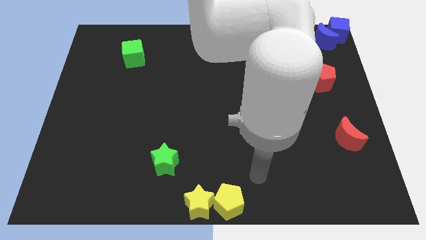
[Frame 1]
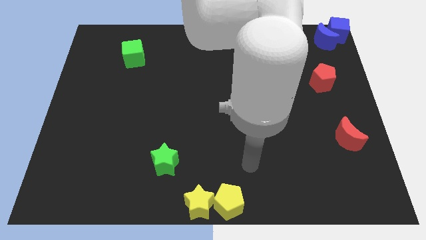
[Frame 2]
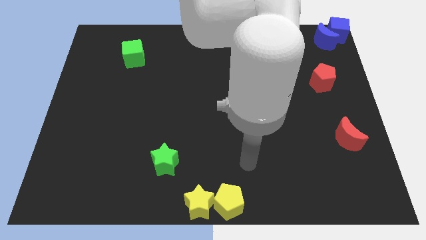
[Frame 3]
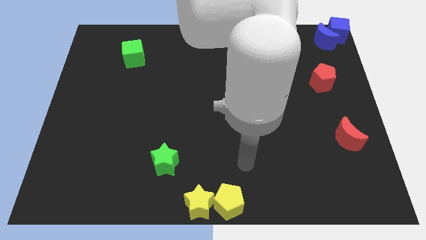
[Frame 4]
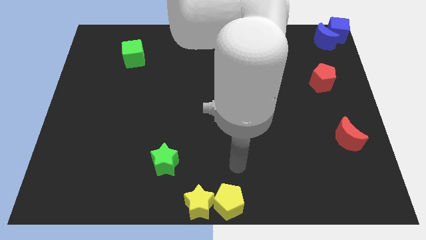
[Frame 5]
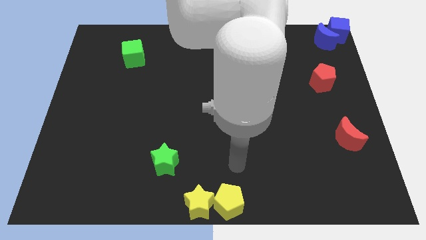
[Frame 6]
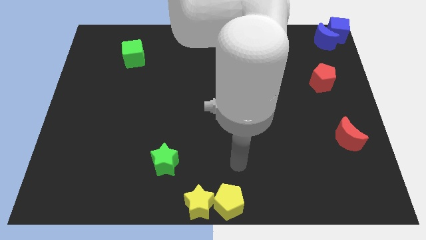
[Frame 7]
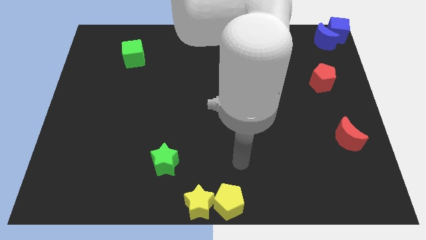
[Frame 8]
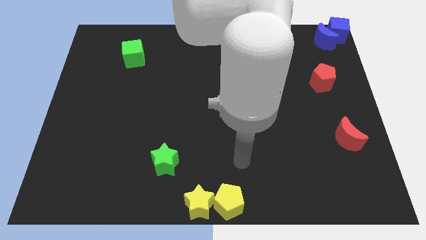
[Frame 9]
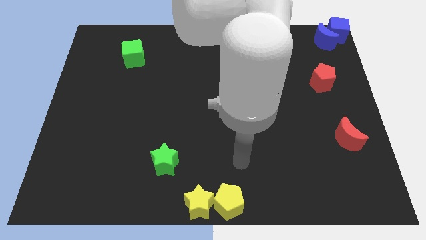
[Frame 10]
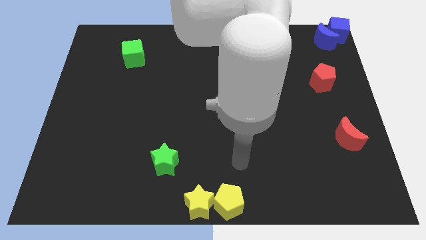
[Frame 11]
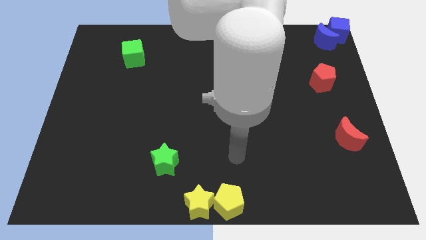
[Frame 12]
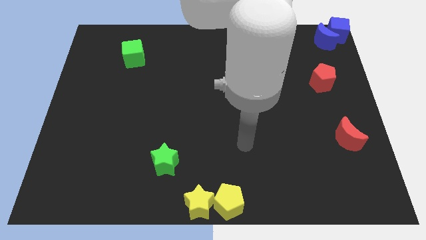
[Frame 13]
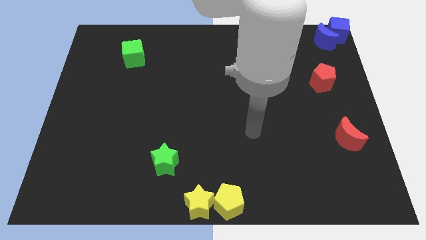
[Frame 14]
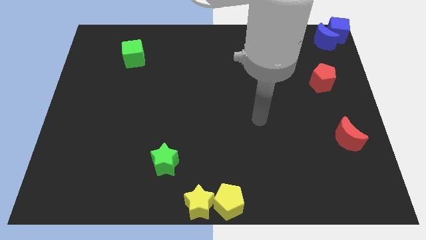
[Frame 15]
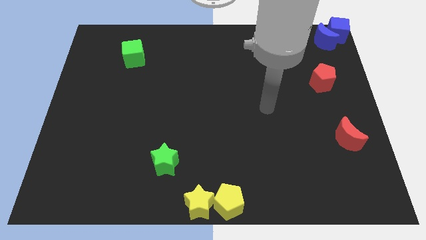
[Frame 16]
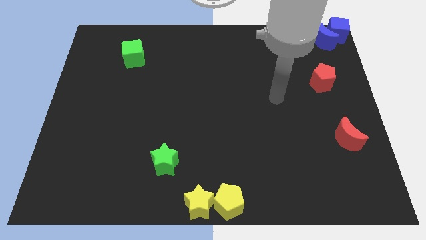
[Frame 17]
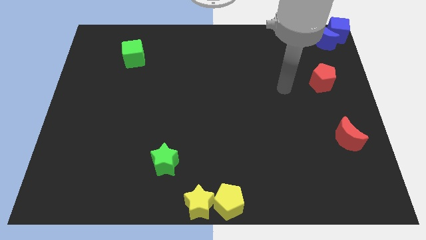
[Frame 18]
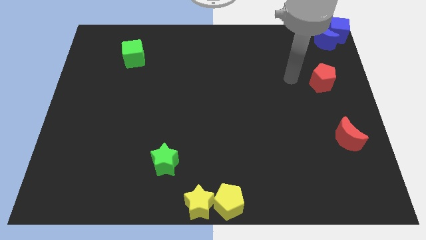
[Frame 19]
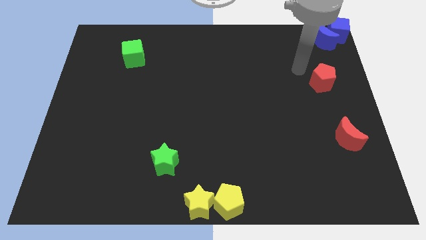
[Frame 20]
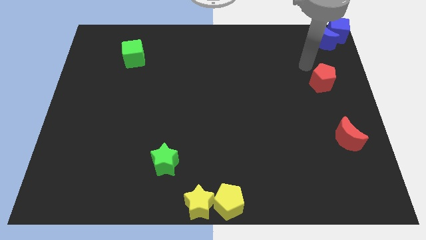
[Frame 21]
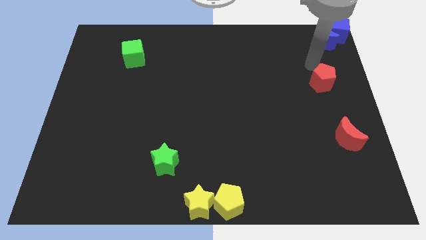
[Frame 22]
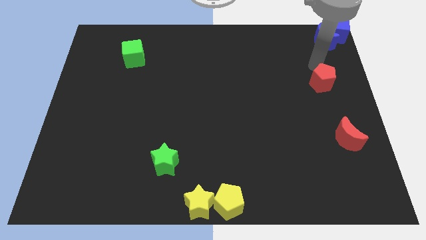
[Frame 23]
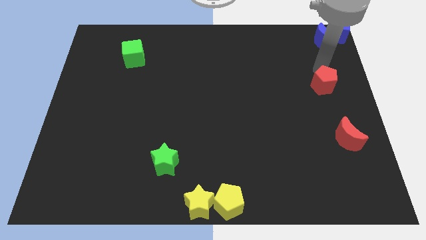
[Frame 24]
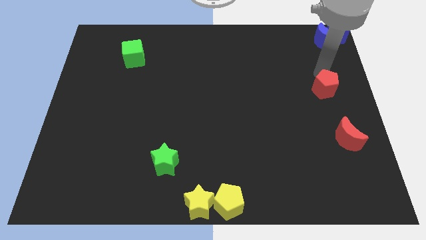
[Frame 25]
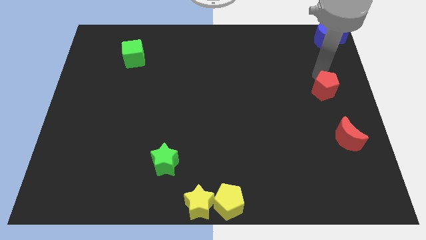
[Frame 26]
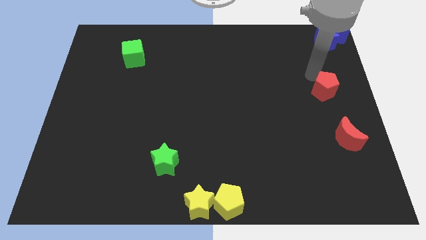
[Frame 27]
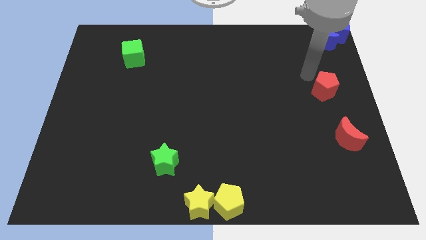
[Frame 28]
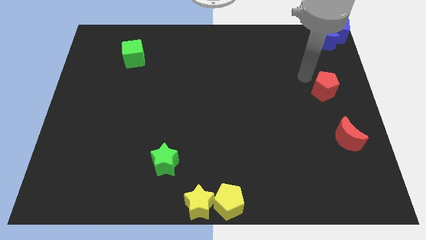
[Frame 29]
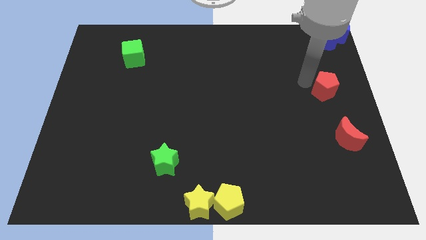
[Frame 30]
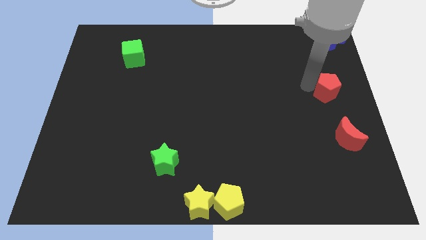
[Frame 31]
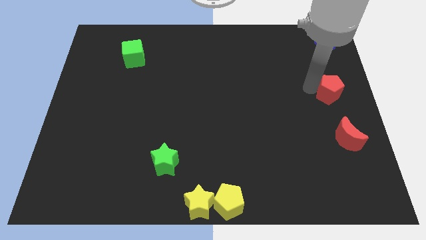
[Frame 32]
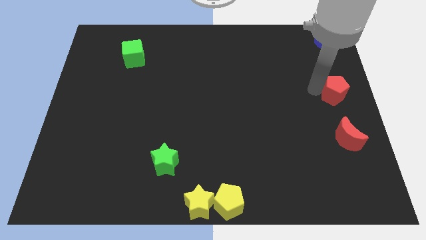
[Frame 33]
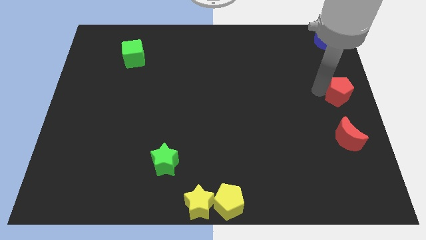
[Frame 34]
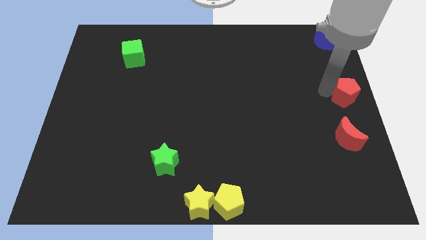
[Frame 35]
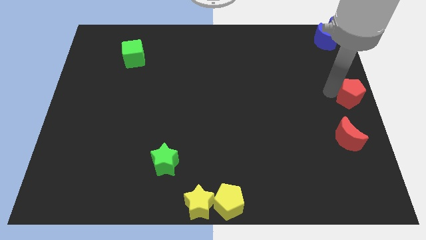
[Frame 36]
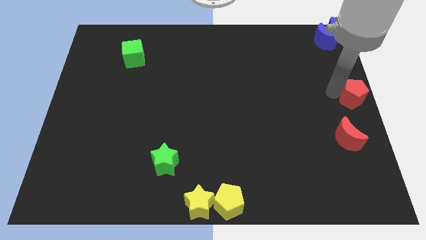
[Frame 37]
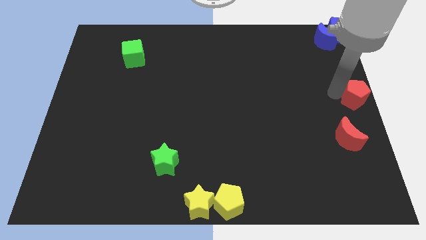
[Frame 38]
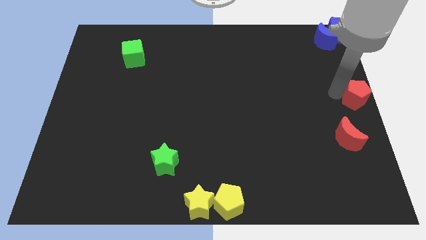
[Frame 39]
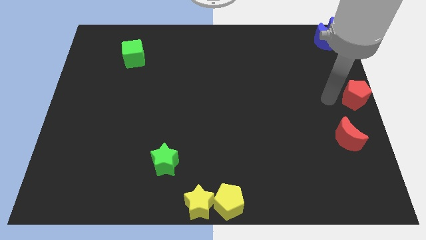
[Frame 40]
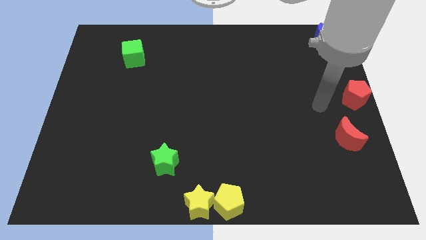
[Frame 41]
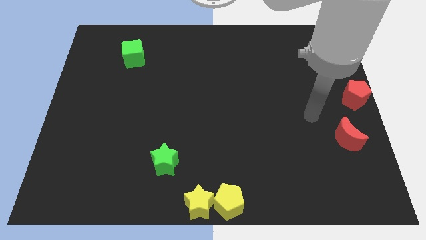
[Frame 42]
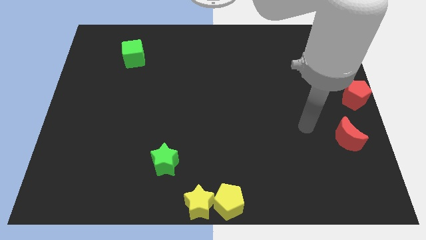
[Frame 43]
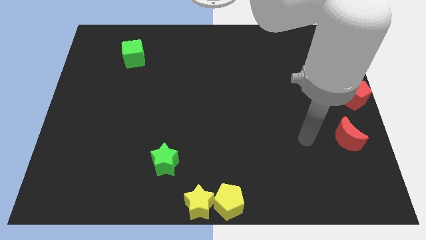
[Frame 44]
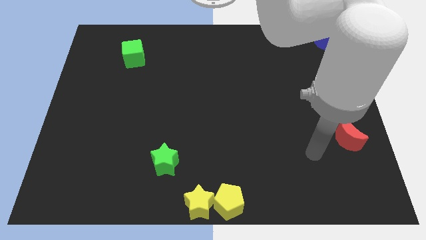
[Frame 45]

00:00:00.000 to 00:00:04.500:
move the red pentagon to the center right of the board

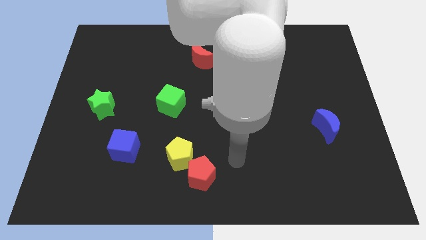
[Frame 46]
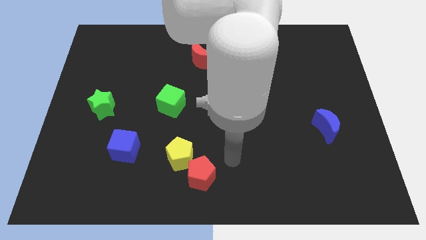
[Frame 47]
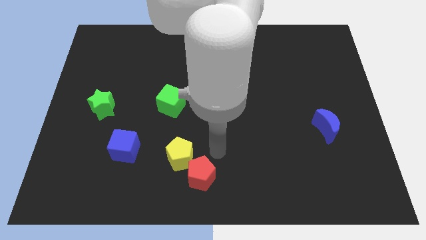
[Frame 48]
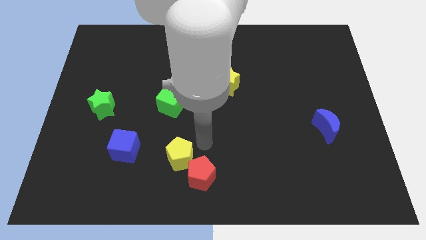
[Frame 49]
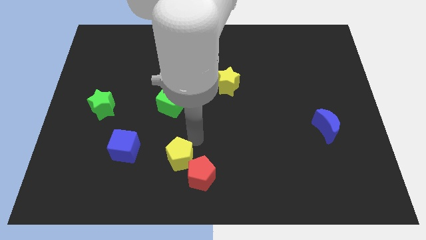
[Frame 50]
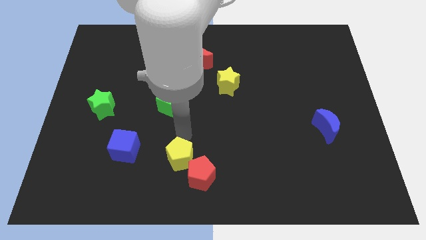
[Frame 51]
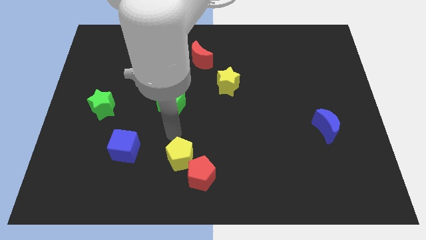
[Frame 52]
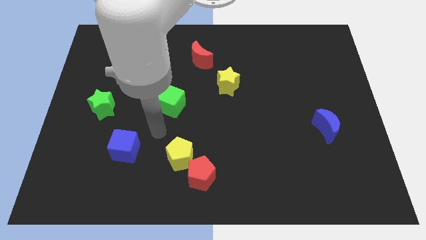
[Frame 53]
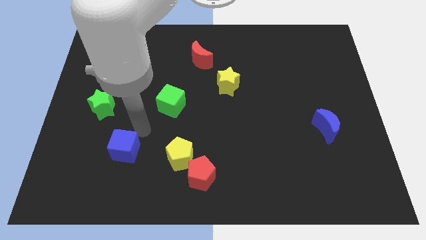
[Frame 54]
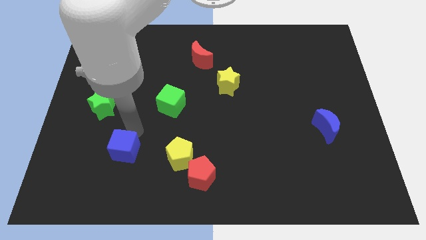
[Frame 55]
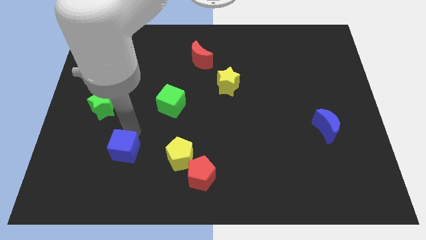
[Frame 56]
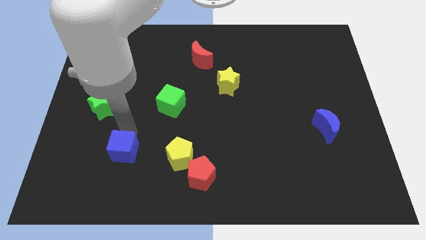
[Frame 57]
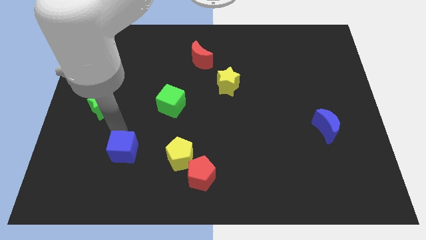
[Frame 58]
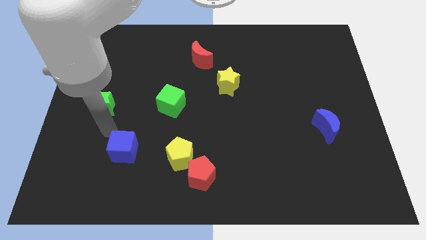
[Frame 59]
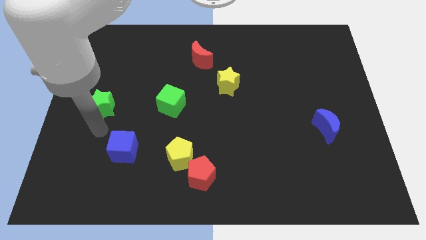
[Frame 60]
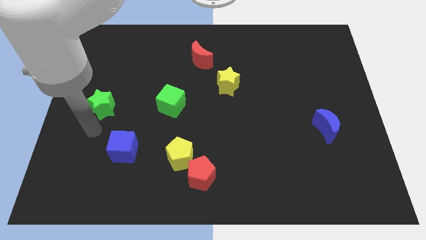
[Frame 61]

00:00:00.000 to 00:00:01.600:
touch the blue cube

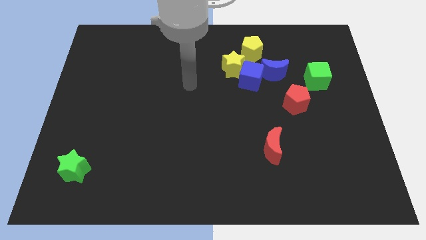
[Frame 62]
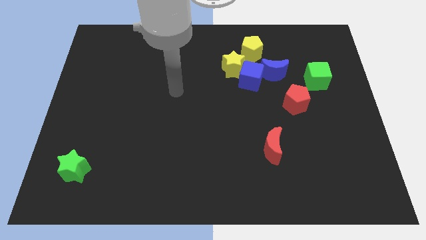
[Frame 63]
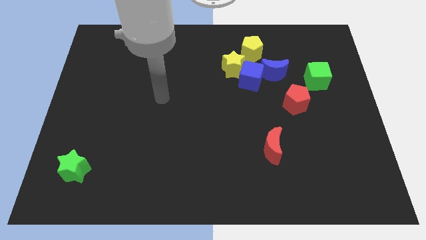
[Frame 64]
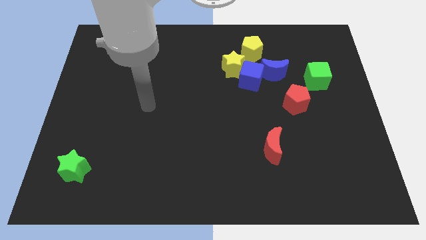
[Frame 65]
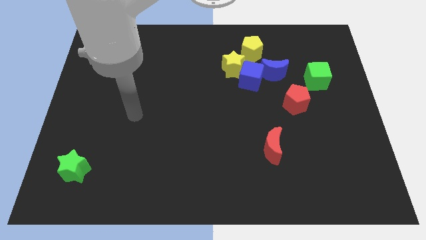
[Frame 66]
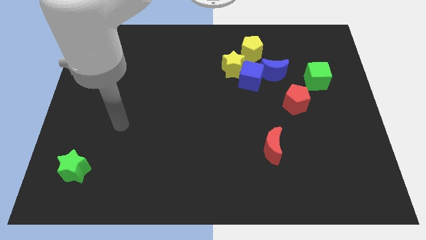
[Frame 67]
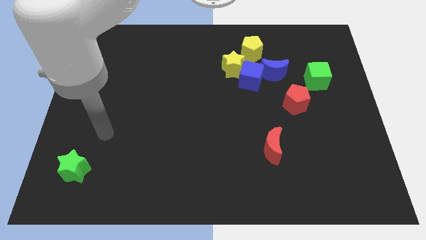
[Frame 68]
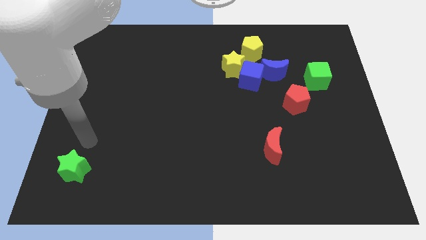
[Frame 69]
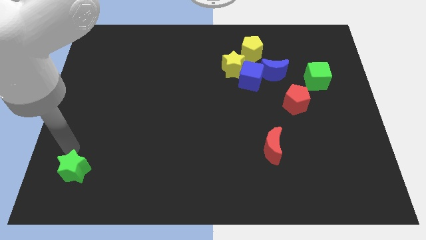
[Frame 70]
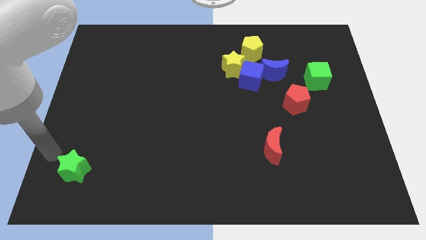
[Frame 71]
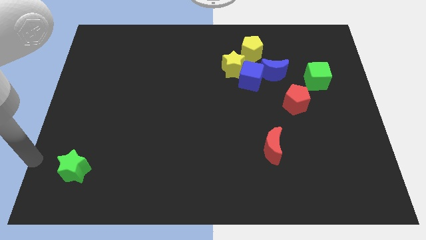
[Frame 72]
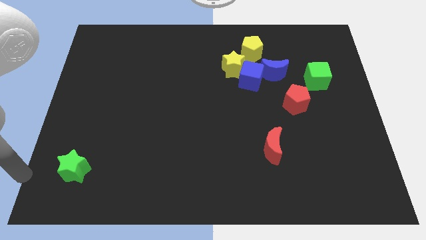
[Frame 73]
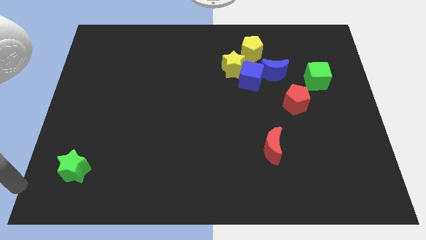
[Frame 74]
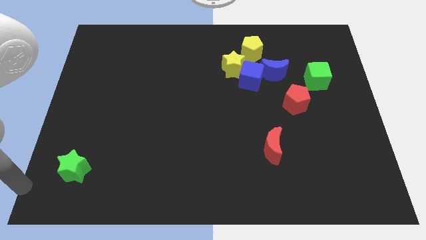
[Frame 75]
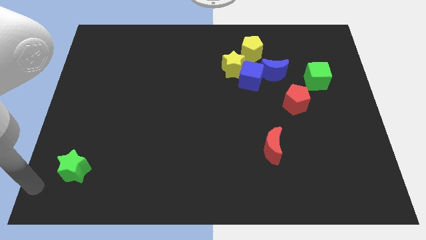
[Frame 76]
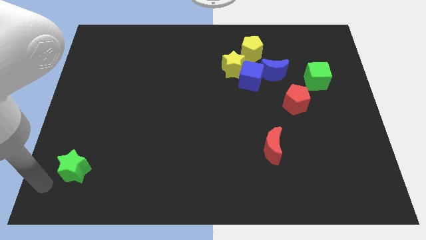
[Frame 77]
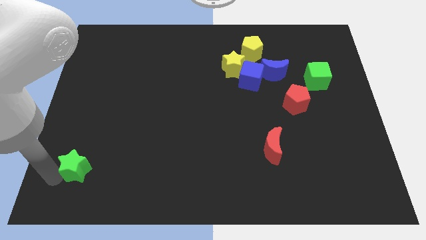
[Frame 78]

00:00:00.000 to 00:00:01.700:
point the arm to the left of the green star

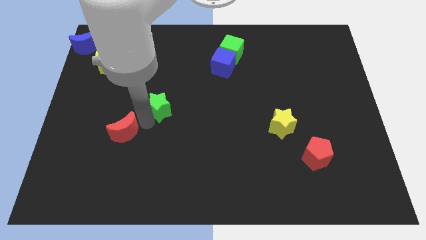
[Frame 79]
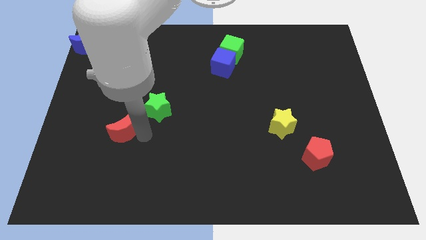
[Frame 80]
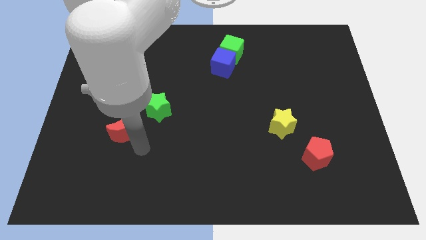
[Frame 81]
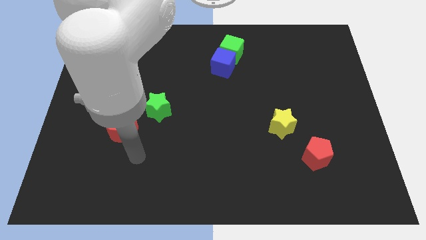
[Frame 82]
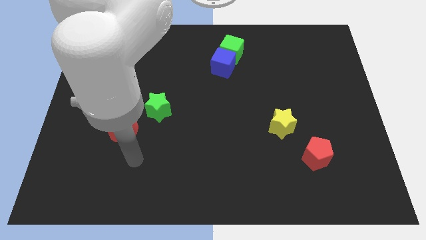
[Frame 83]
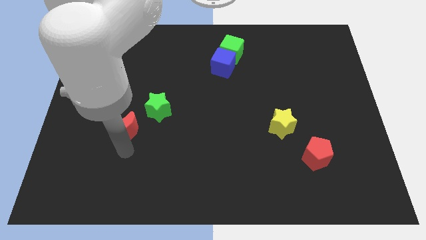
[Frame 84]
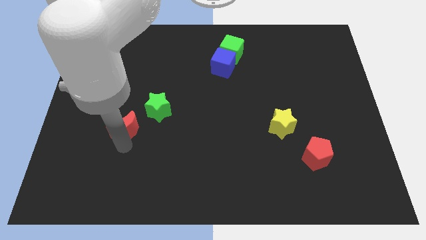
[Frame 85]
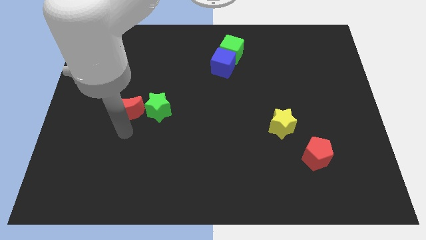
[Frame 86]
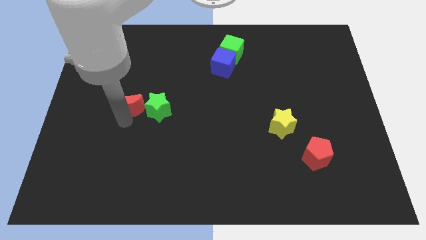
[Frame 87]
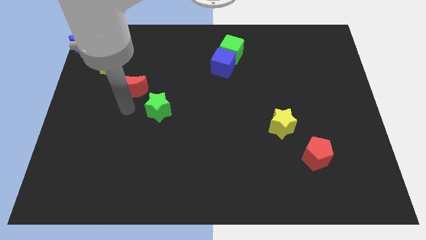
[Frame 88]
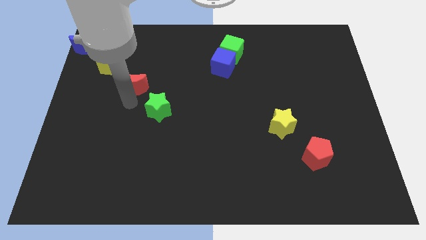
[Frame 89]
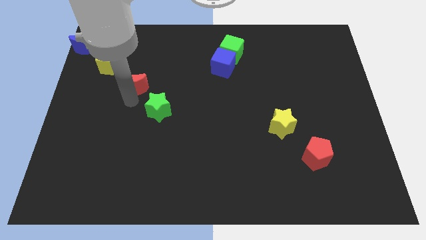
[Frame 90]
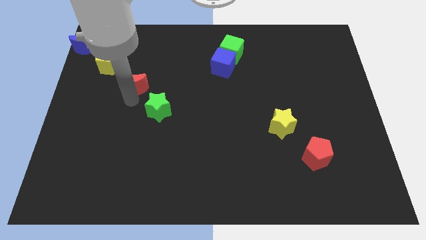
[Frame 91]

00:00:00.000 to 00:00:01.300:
put the red crescent in between the yellow pentagon and green star
